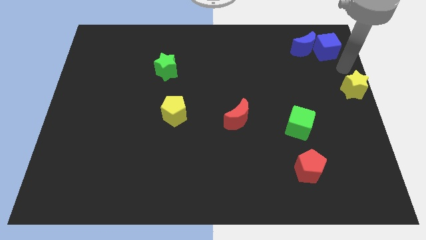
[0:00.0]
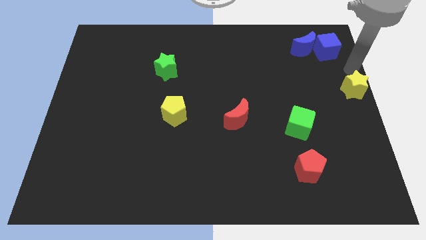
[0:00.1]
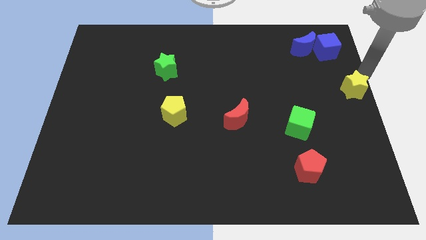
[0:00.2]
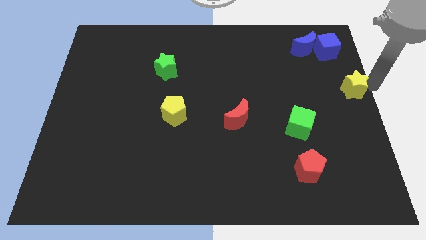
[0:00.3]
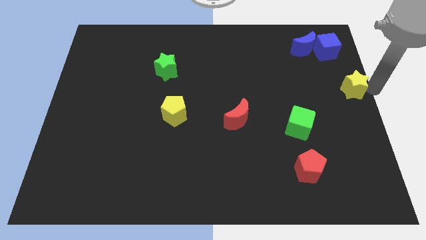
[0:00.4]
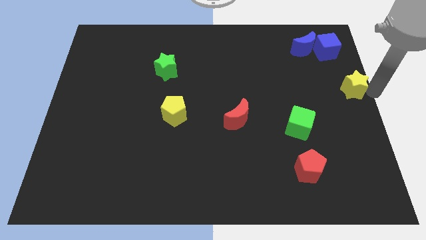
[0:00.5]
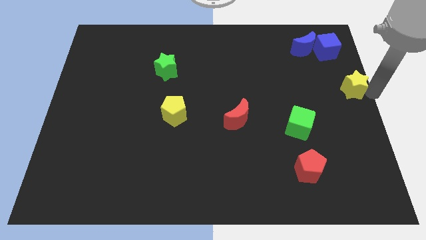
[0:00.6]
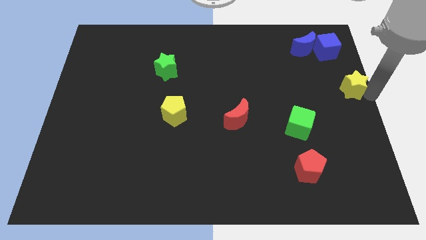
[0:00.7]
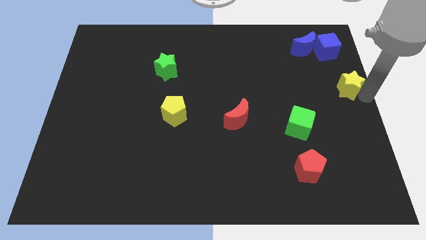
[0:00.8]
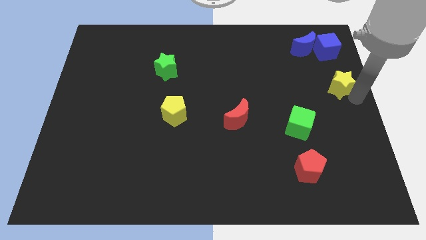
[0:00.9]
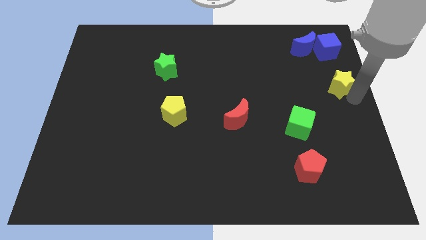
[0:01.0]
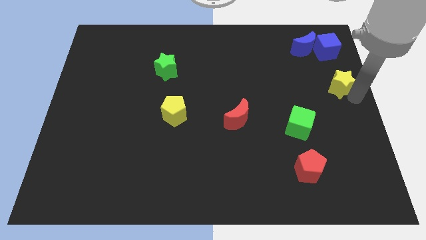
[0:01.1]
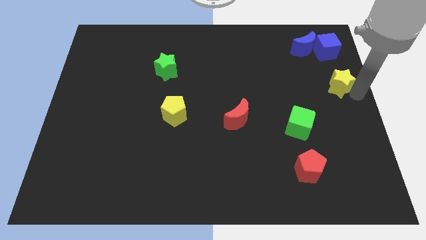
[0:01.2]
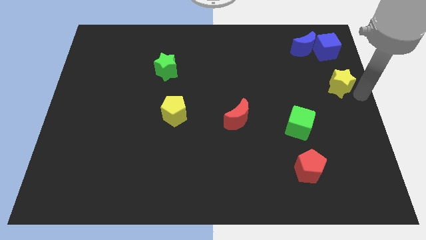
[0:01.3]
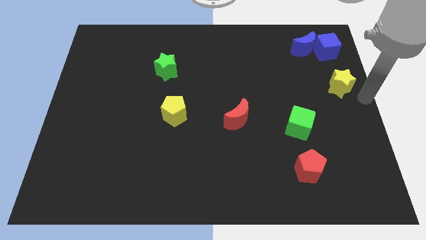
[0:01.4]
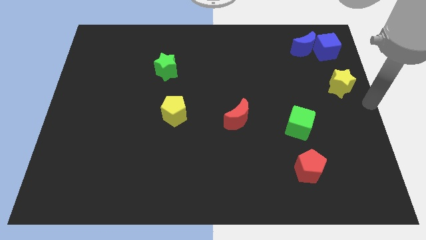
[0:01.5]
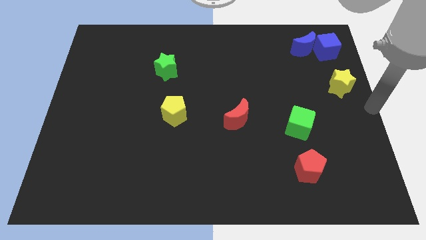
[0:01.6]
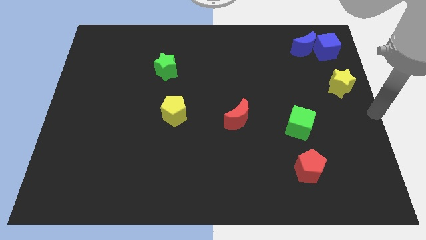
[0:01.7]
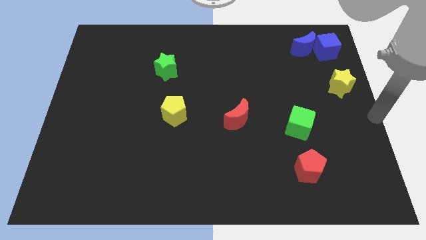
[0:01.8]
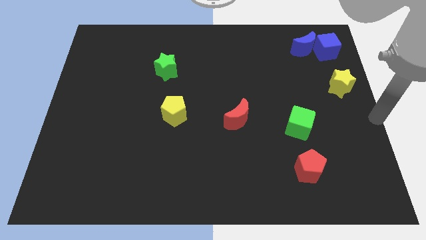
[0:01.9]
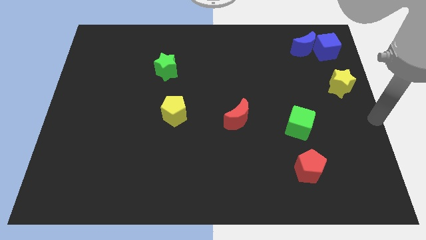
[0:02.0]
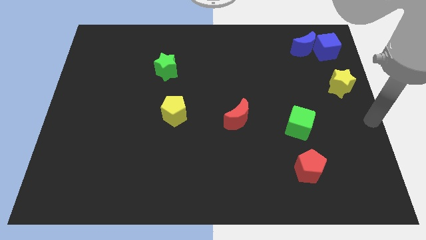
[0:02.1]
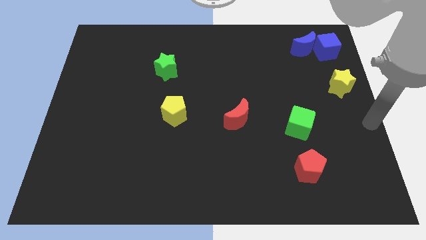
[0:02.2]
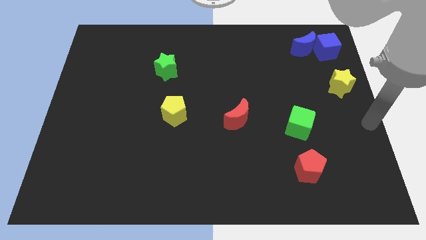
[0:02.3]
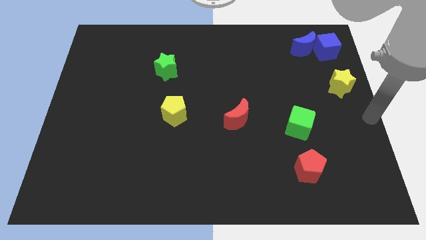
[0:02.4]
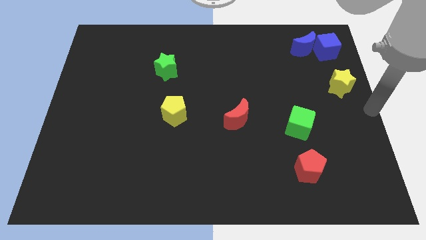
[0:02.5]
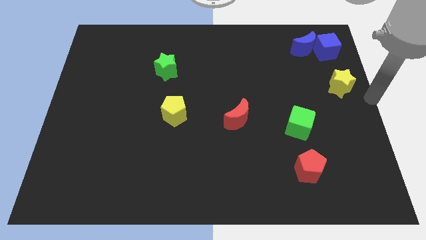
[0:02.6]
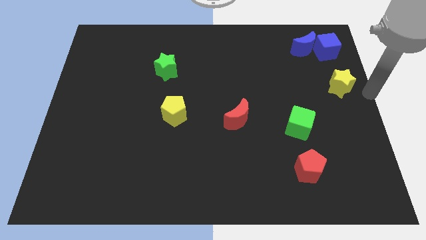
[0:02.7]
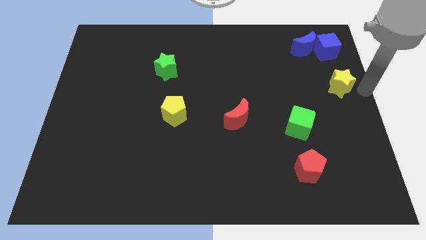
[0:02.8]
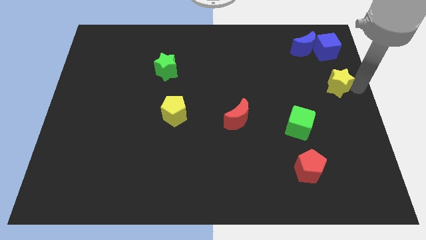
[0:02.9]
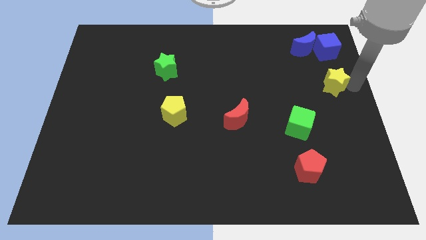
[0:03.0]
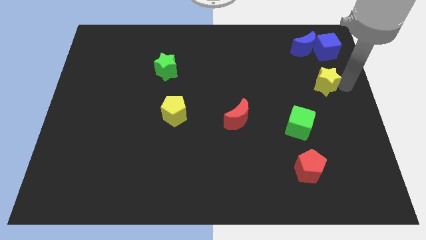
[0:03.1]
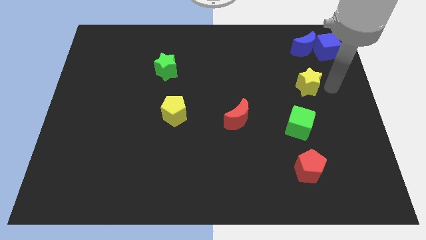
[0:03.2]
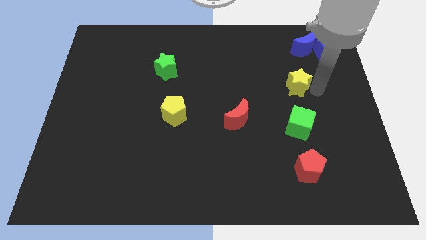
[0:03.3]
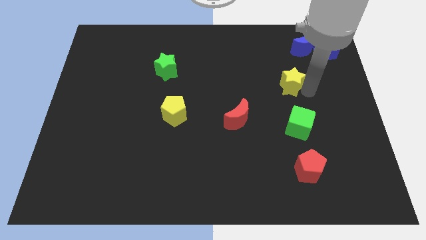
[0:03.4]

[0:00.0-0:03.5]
push the yellow star to the left of the board

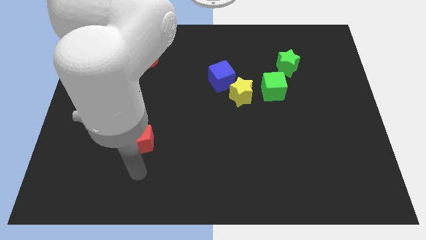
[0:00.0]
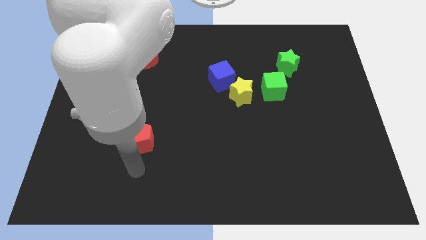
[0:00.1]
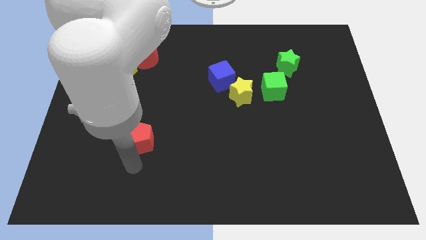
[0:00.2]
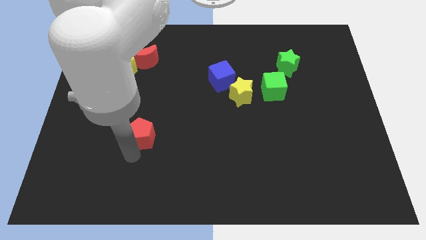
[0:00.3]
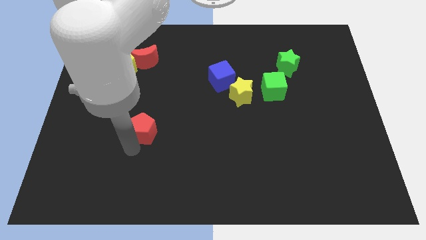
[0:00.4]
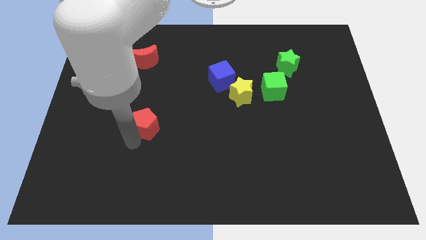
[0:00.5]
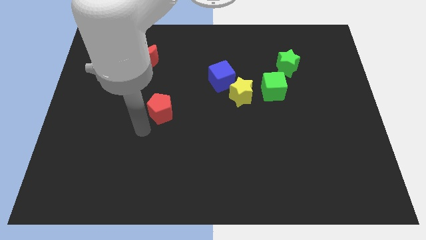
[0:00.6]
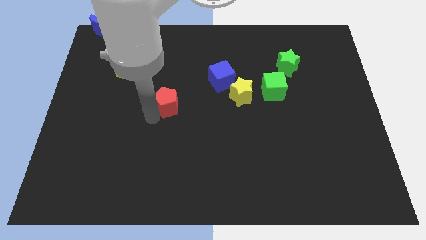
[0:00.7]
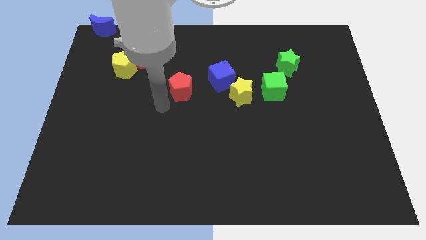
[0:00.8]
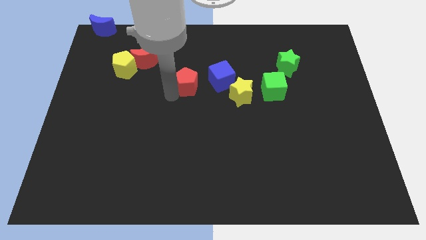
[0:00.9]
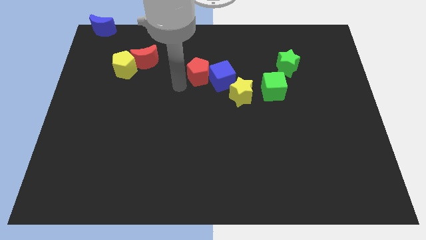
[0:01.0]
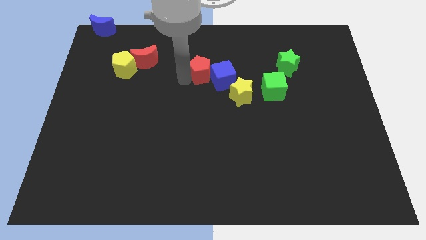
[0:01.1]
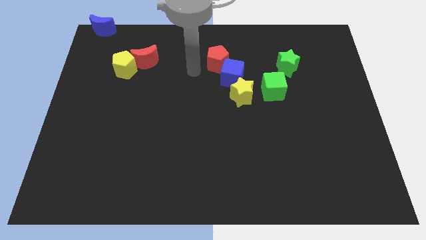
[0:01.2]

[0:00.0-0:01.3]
make the red pentagon to touch the left side of the blue cube

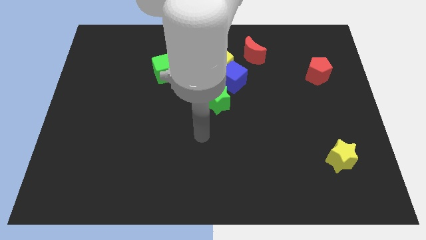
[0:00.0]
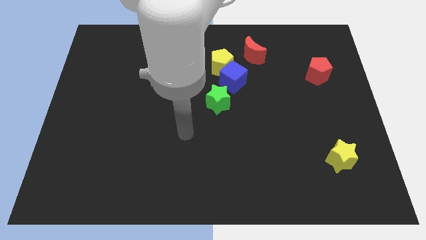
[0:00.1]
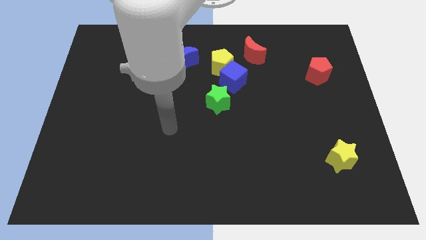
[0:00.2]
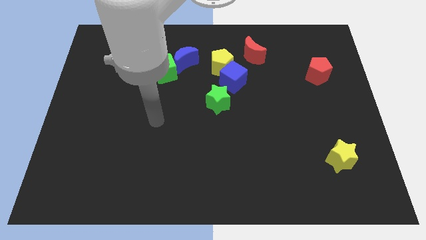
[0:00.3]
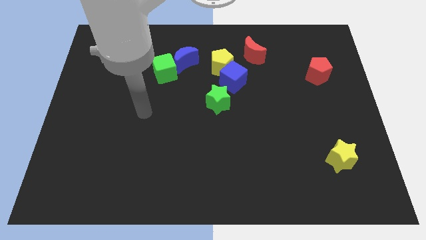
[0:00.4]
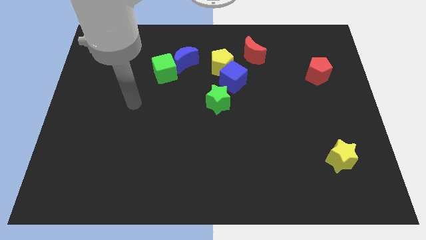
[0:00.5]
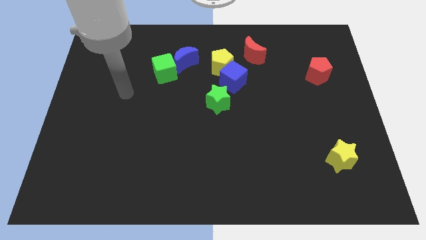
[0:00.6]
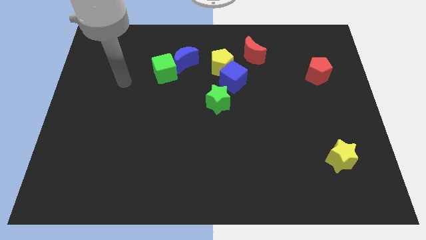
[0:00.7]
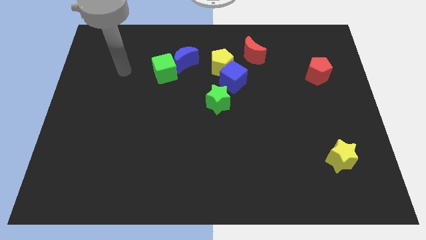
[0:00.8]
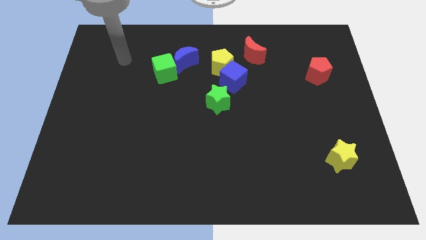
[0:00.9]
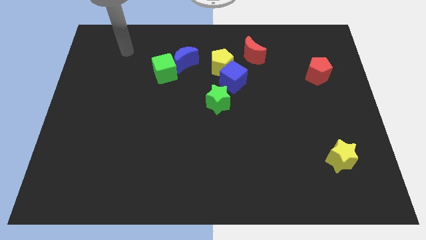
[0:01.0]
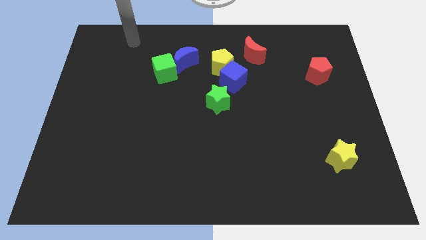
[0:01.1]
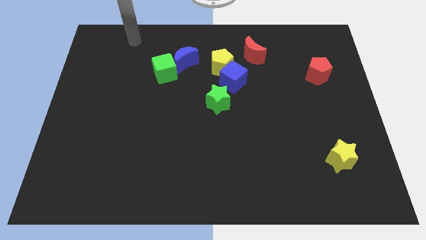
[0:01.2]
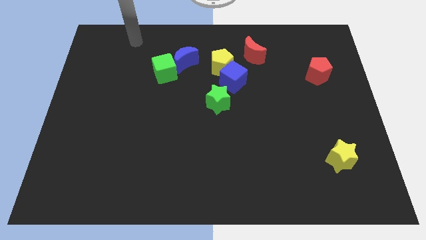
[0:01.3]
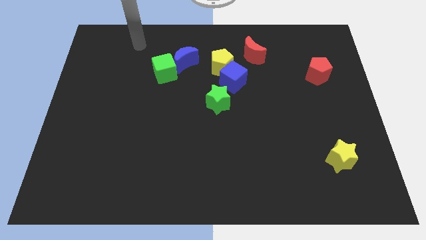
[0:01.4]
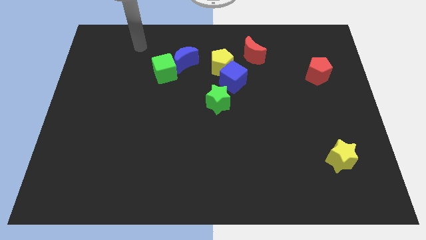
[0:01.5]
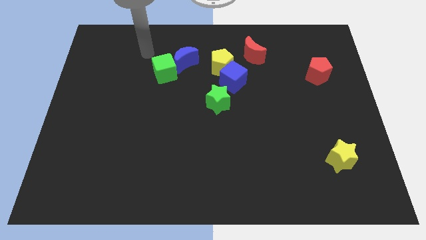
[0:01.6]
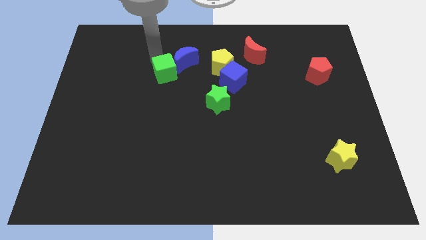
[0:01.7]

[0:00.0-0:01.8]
move your arm towards the green cube

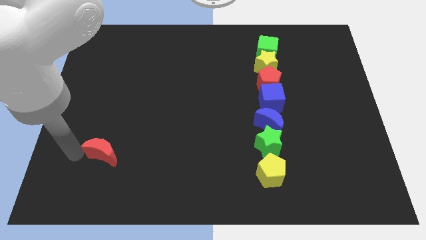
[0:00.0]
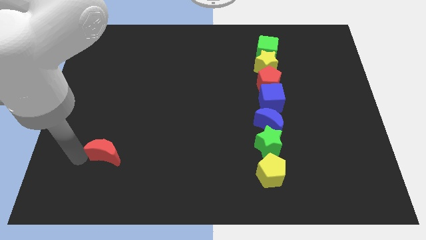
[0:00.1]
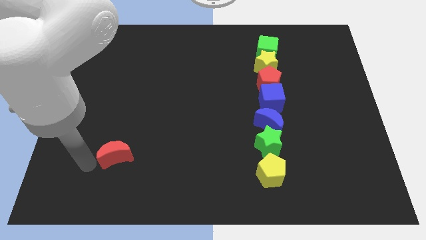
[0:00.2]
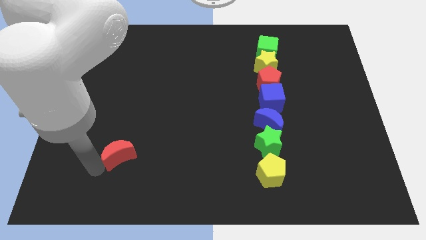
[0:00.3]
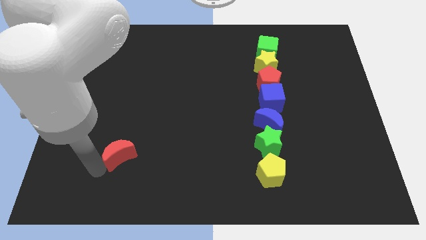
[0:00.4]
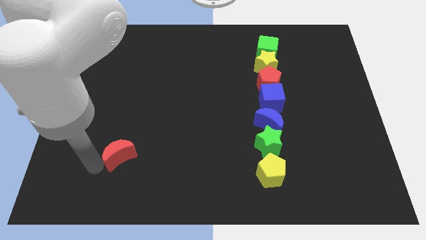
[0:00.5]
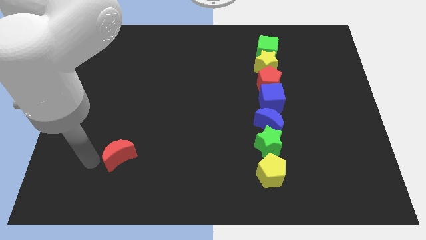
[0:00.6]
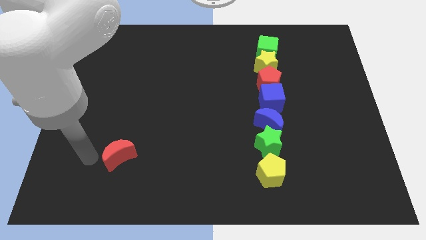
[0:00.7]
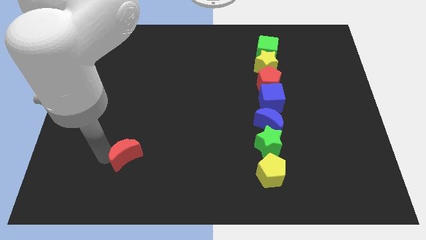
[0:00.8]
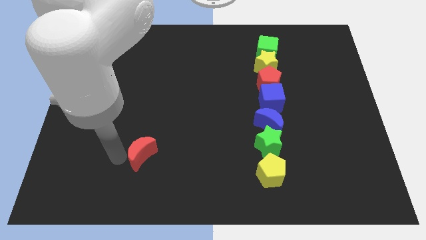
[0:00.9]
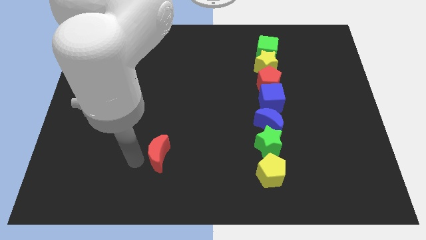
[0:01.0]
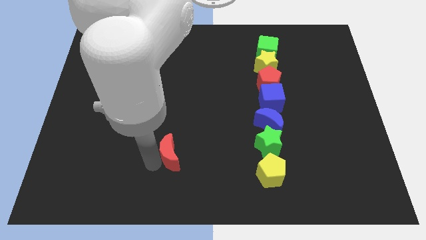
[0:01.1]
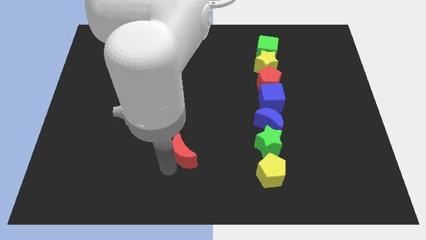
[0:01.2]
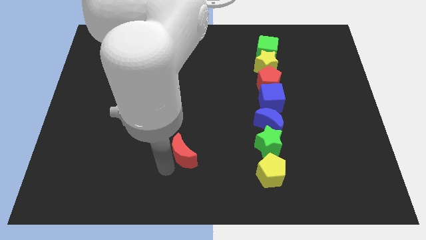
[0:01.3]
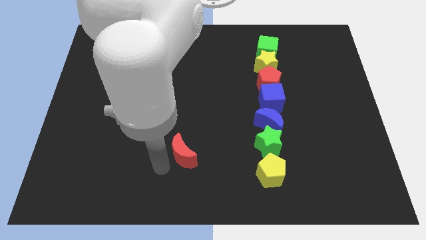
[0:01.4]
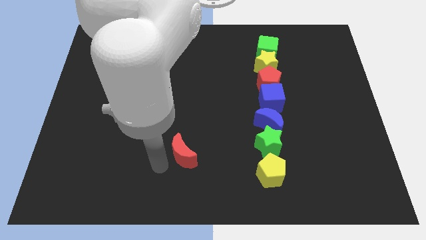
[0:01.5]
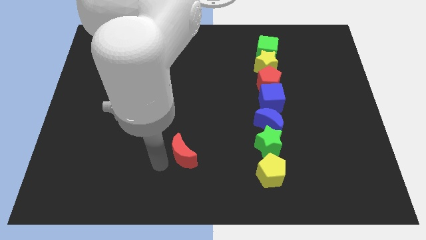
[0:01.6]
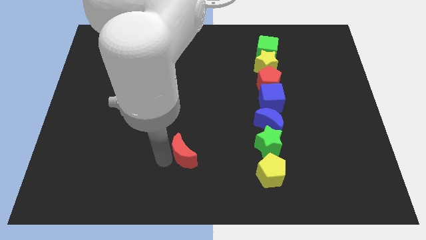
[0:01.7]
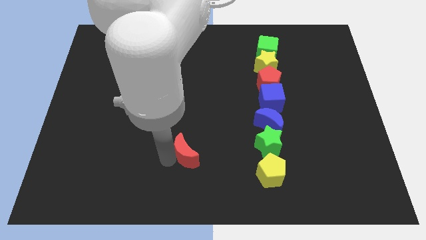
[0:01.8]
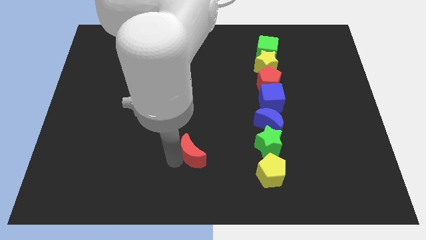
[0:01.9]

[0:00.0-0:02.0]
drag red moon towards right side of the board

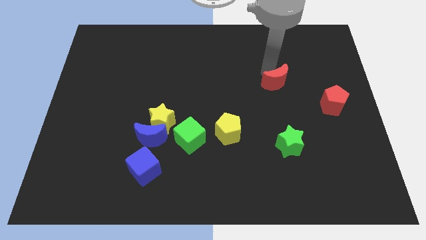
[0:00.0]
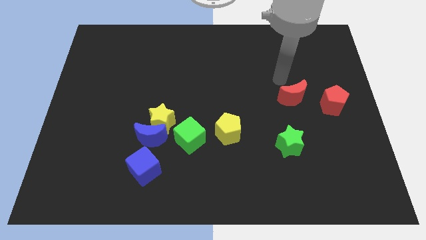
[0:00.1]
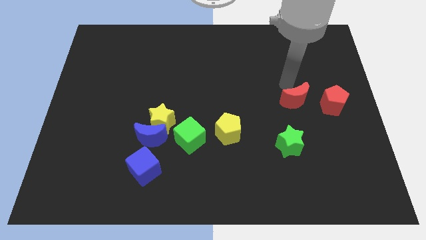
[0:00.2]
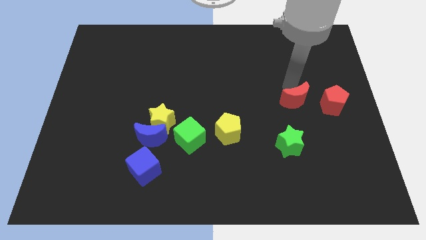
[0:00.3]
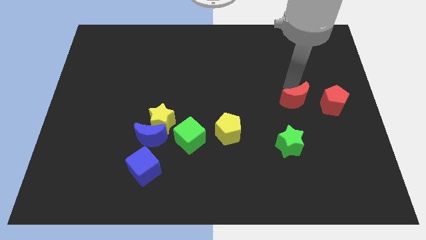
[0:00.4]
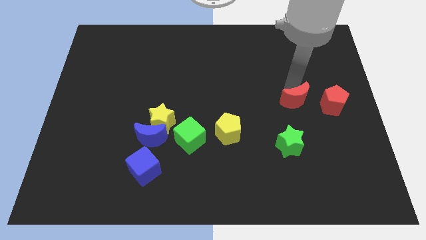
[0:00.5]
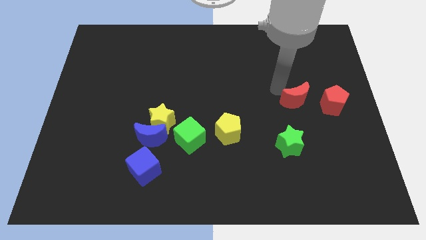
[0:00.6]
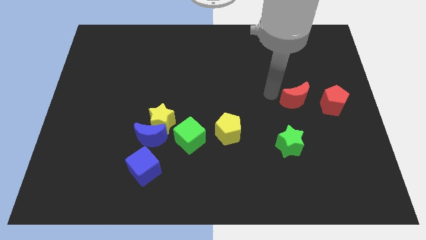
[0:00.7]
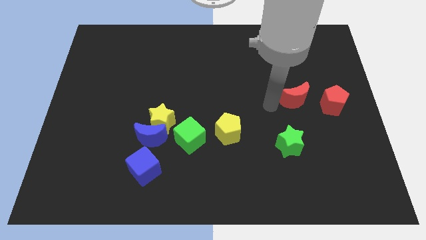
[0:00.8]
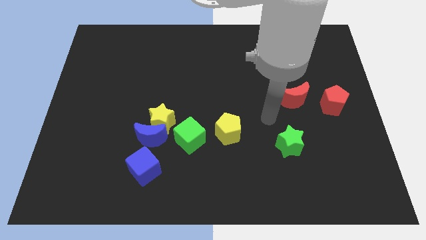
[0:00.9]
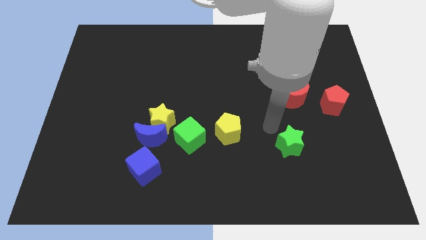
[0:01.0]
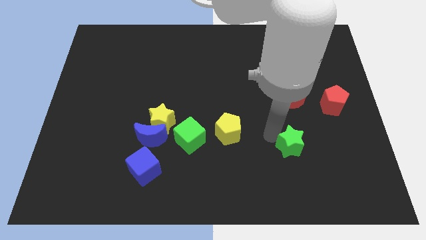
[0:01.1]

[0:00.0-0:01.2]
push the red crescent slightly to the bottom
